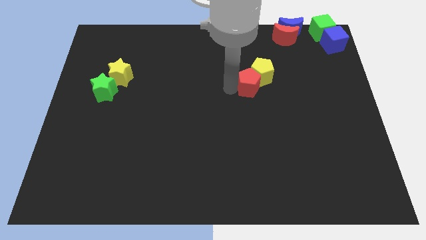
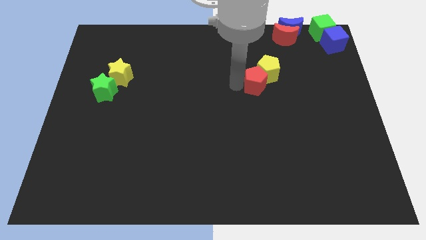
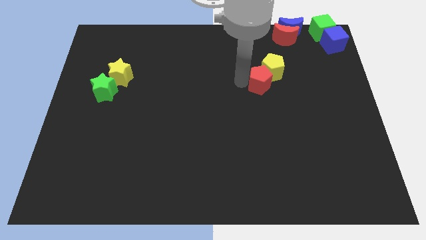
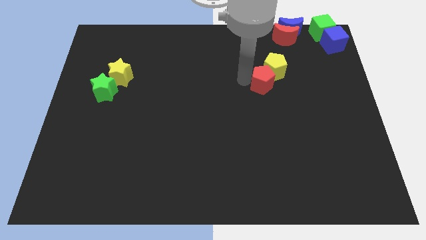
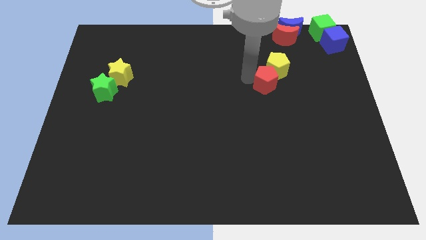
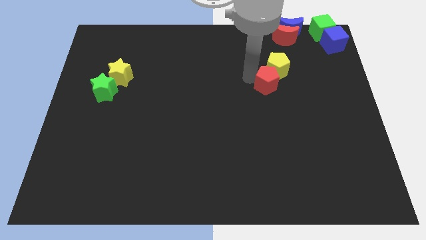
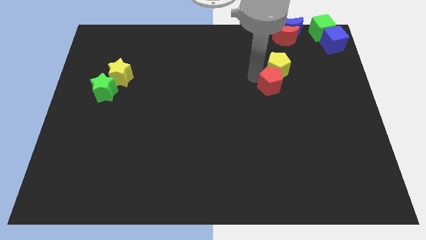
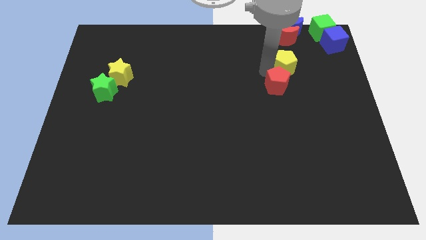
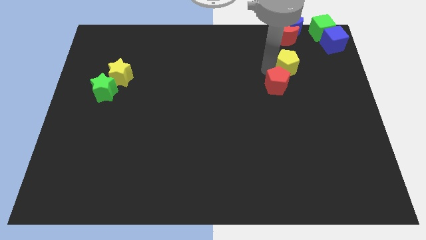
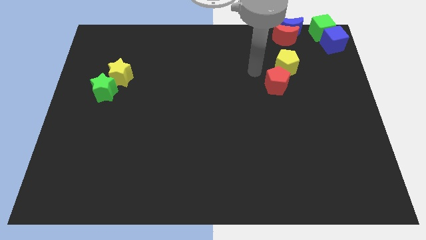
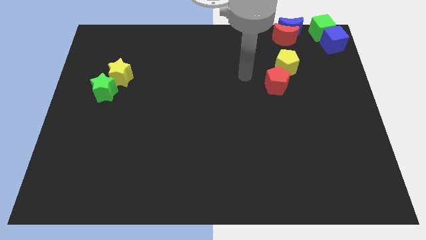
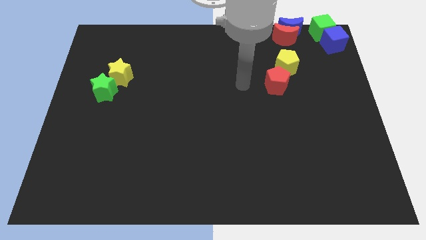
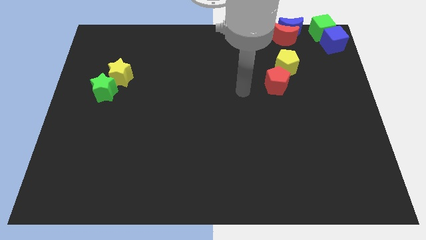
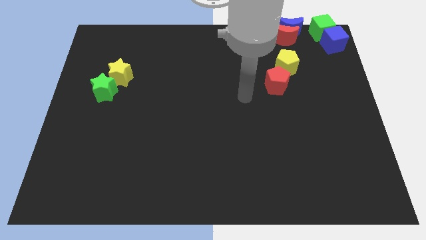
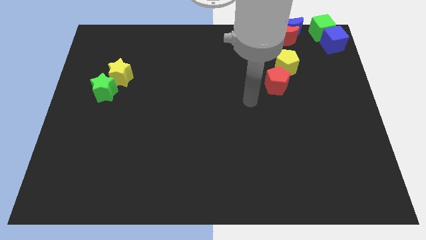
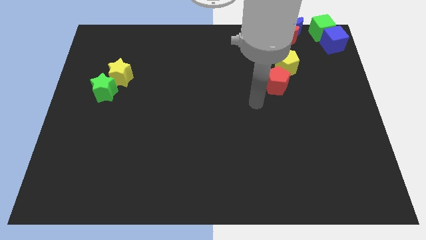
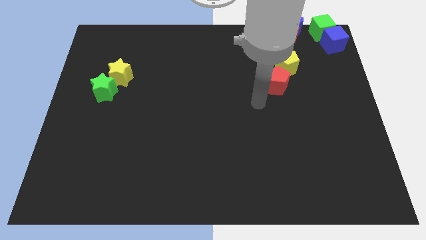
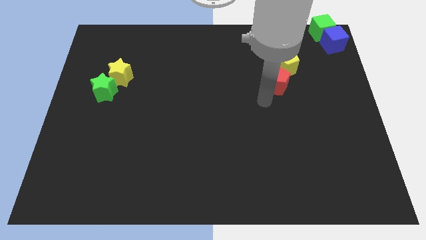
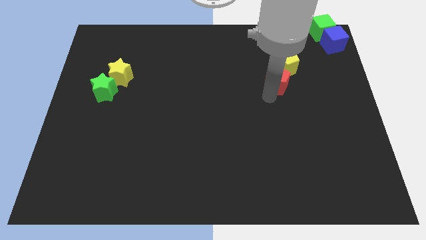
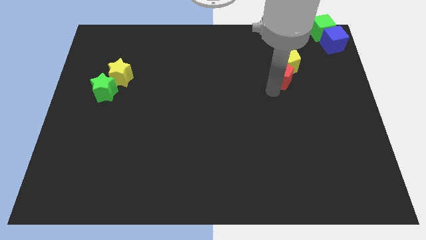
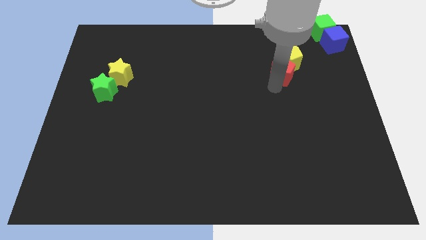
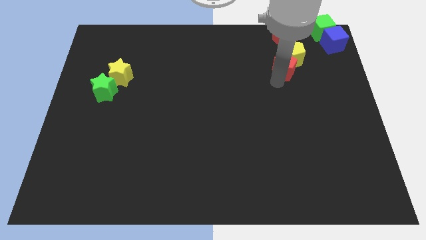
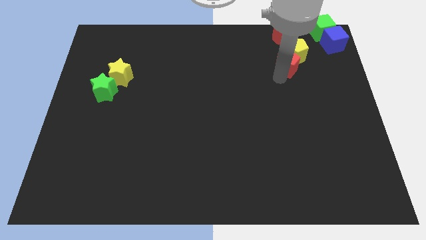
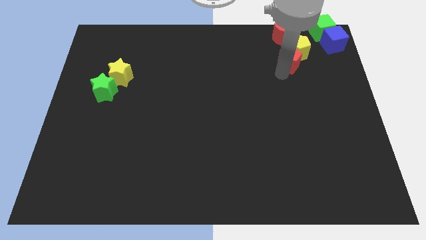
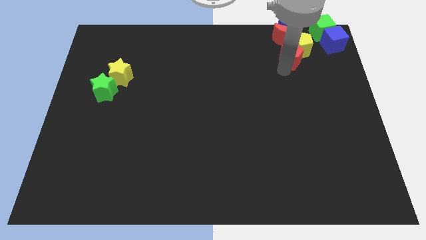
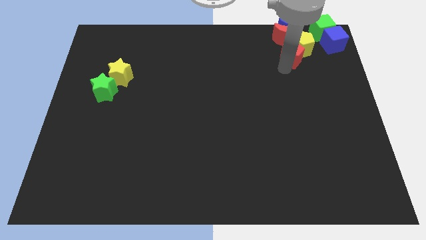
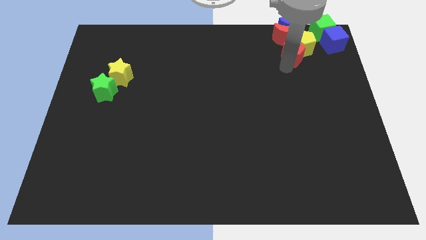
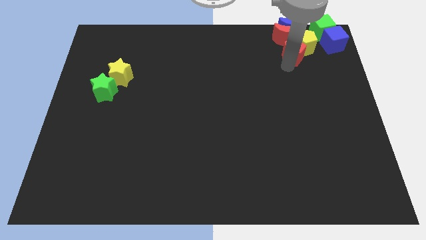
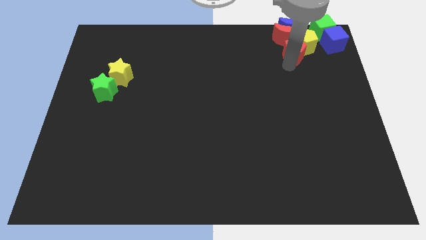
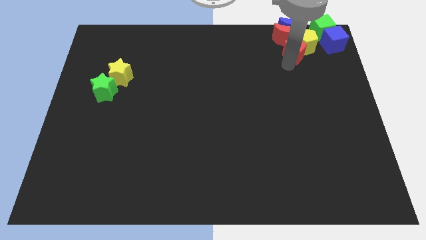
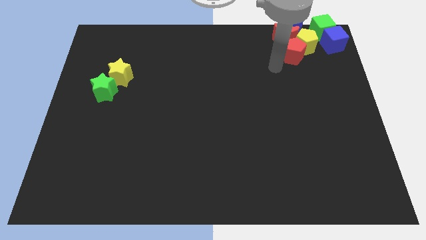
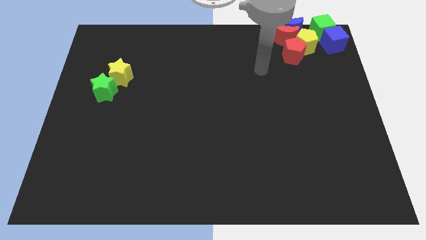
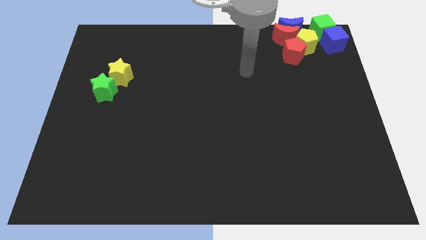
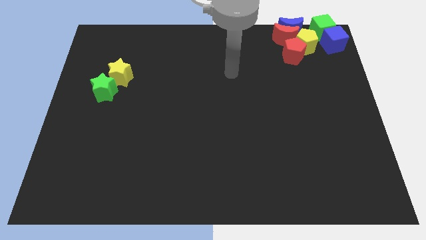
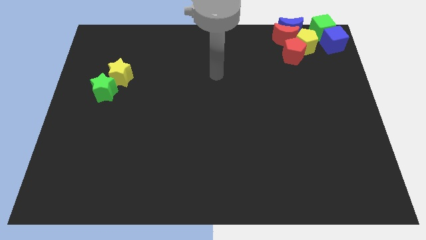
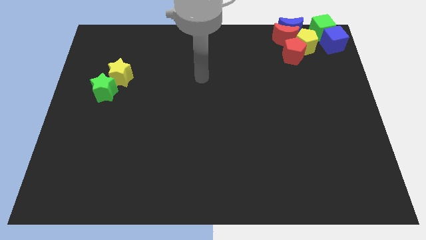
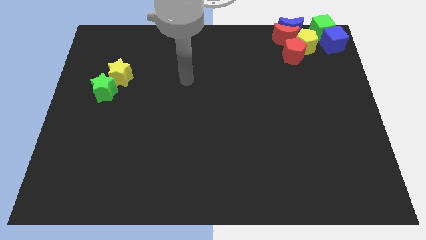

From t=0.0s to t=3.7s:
push pentagon pair in to red and blue crescent

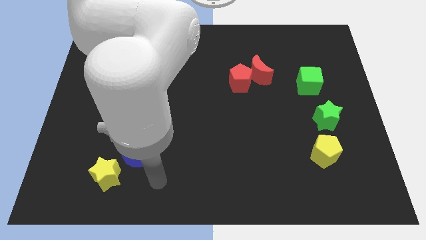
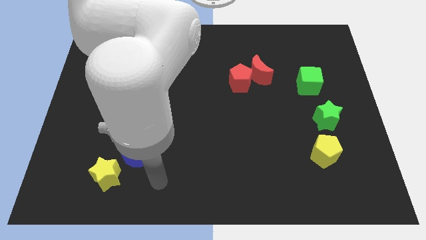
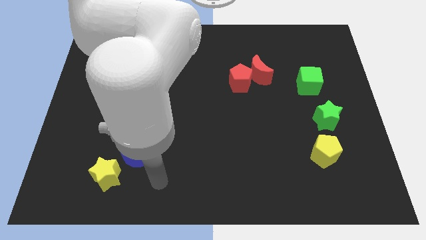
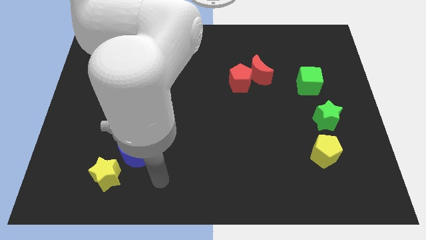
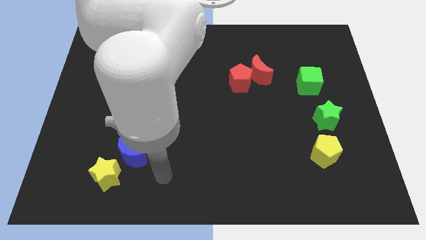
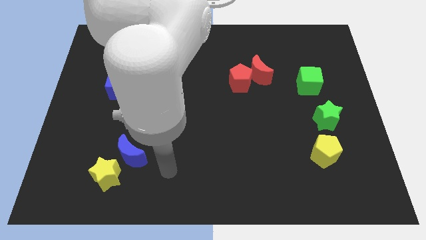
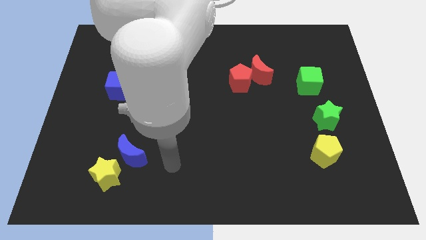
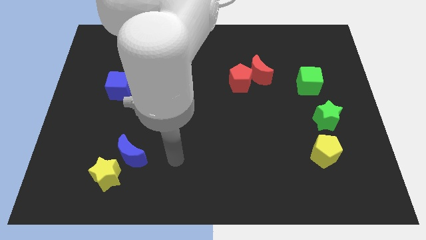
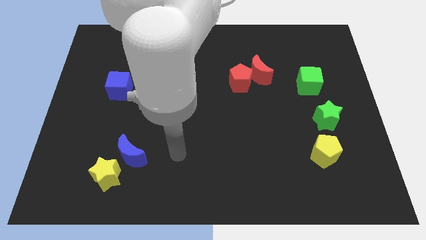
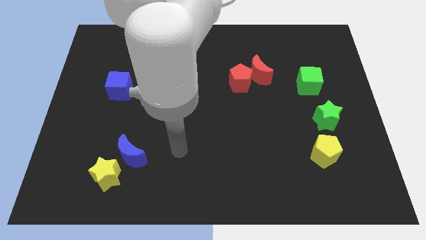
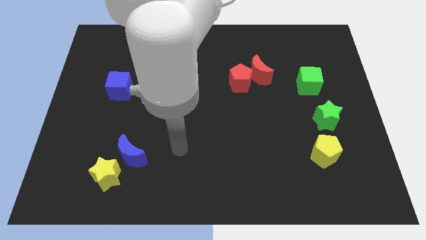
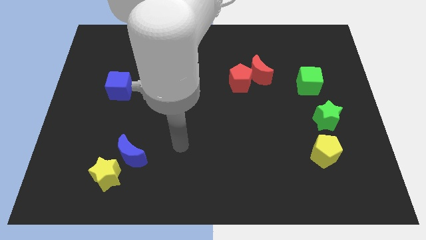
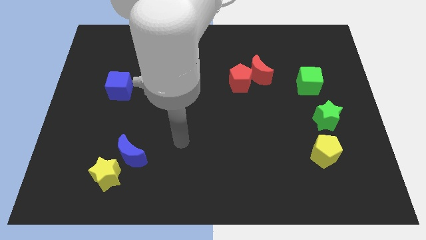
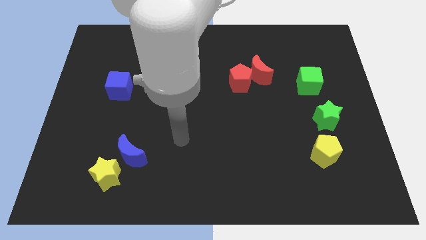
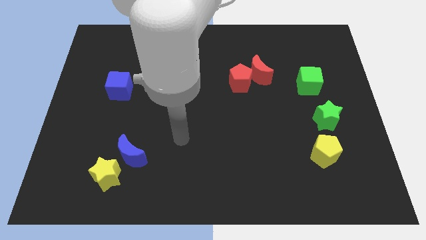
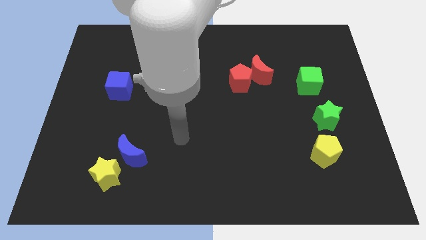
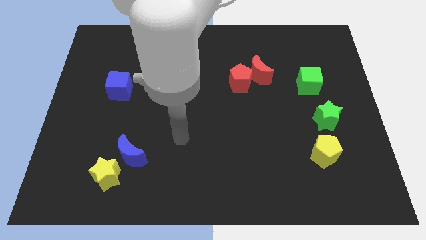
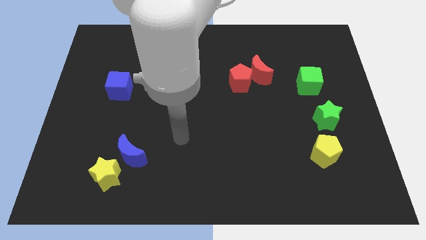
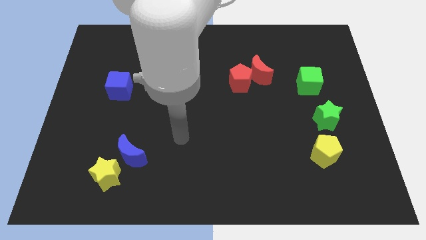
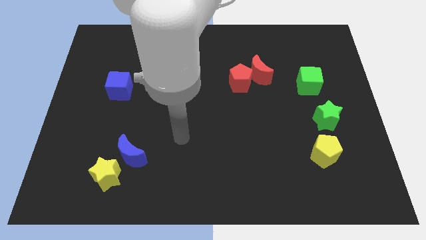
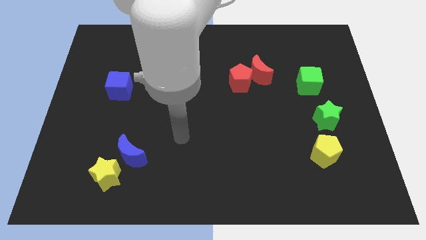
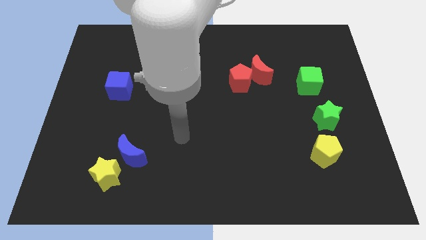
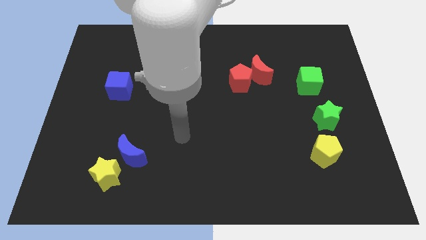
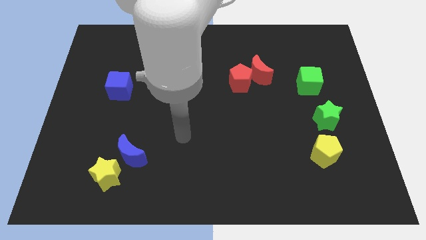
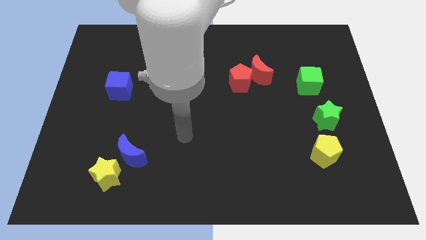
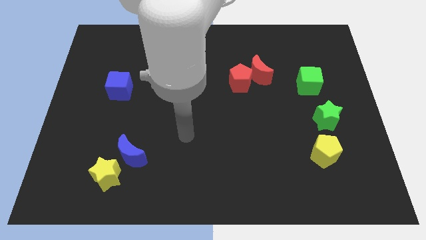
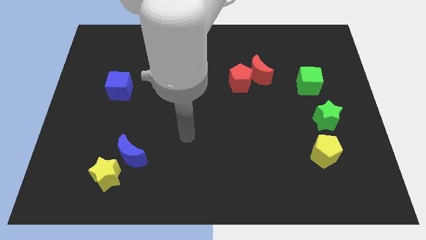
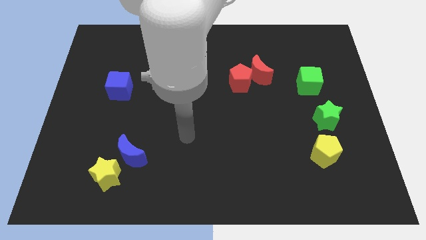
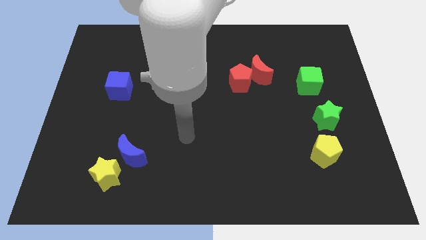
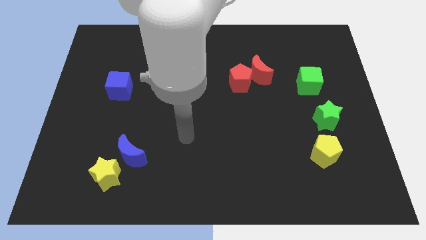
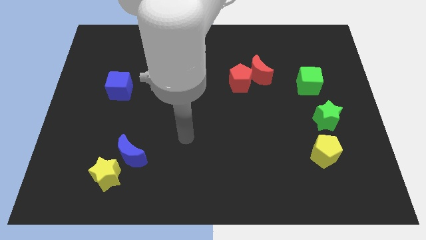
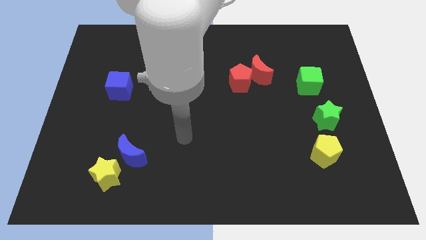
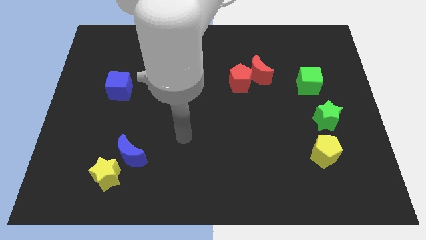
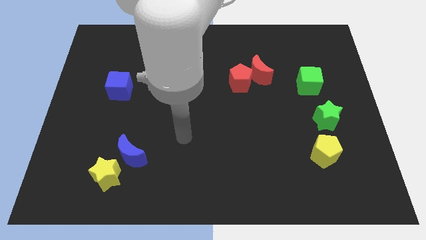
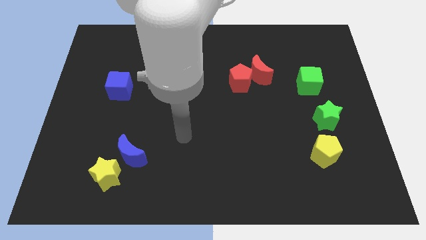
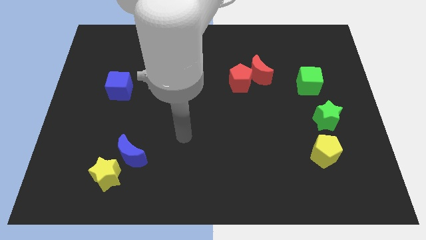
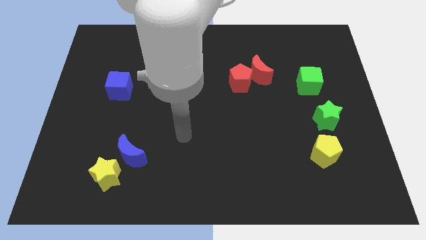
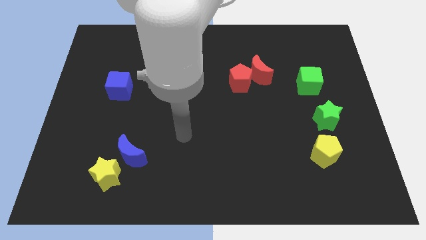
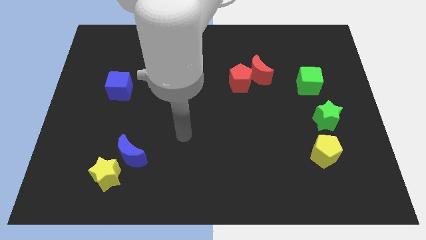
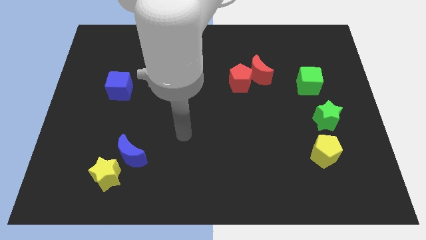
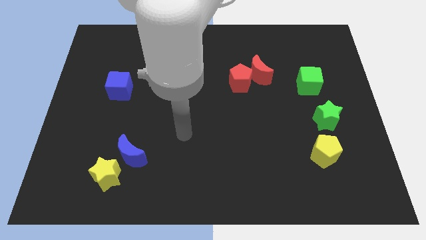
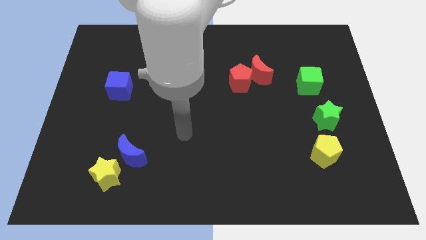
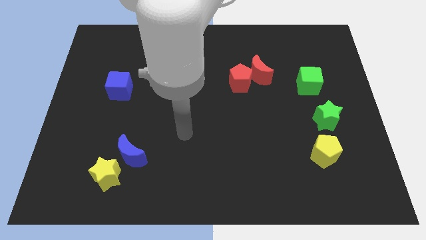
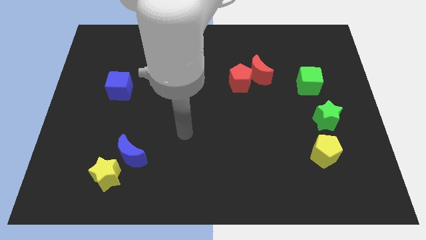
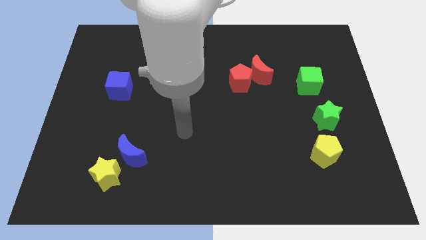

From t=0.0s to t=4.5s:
push the arm towards the center of the board
